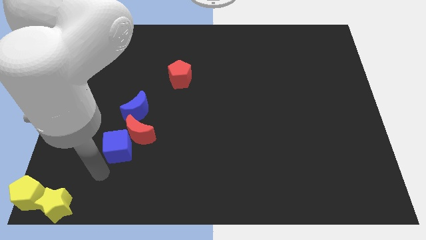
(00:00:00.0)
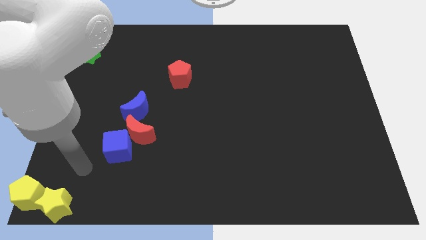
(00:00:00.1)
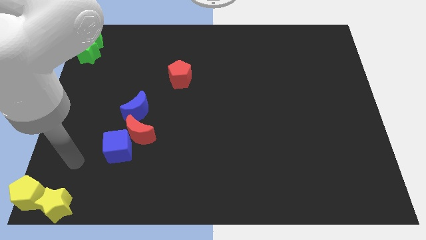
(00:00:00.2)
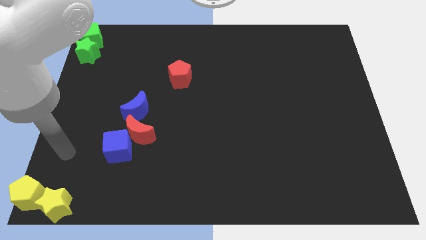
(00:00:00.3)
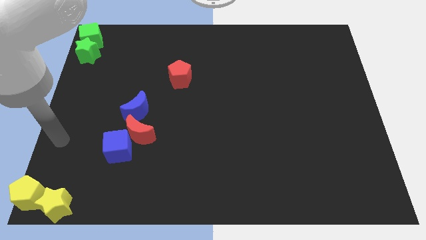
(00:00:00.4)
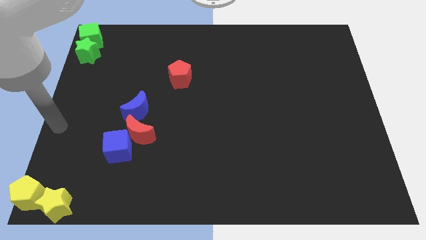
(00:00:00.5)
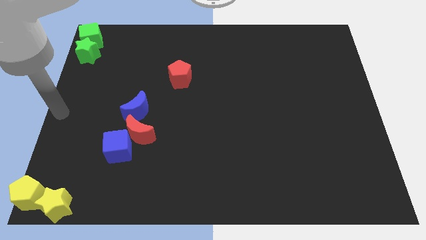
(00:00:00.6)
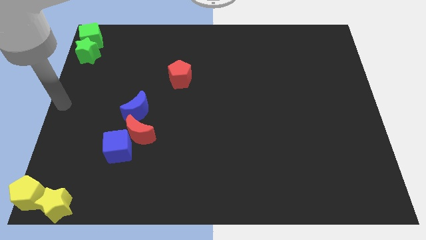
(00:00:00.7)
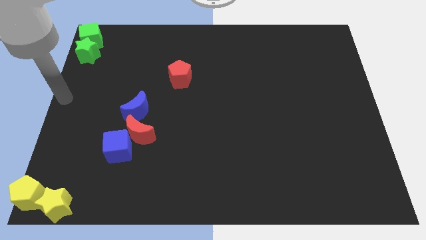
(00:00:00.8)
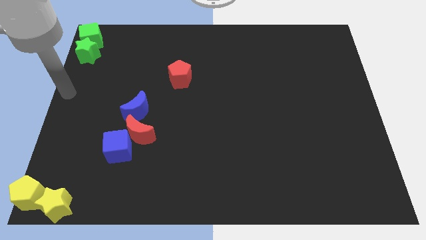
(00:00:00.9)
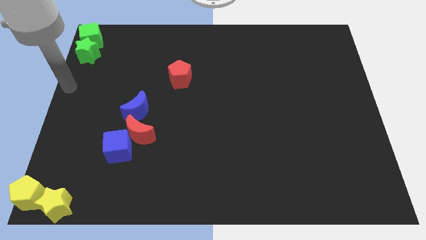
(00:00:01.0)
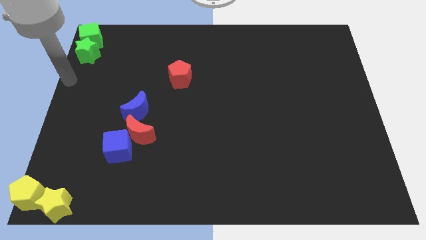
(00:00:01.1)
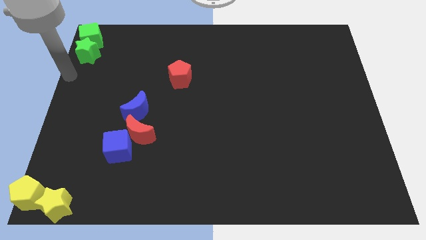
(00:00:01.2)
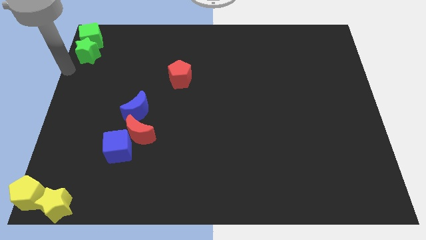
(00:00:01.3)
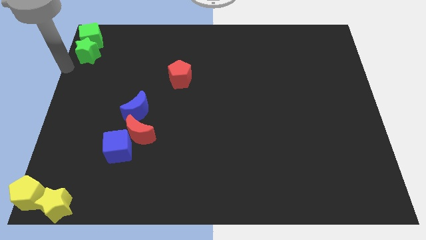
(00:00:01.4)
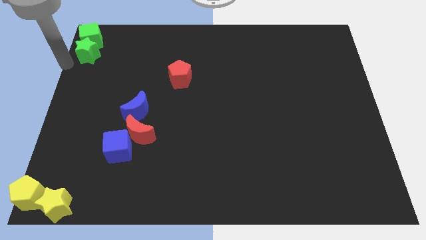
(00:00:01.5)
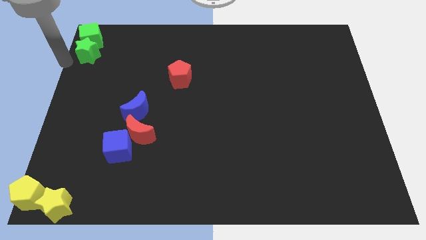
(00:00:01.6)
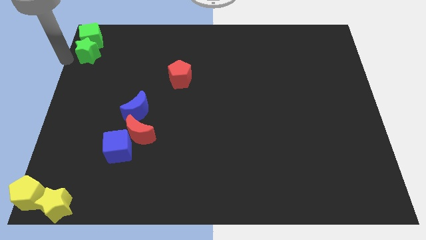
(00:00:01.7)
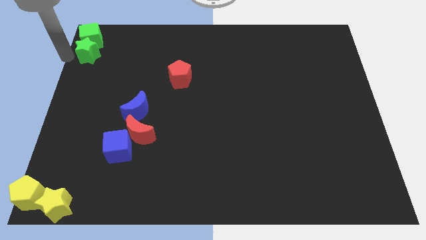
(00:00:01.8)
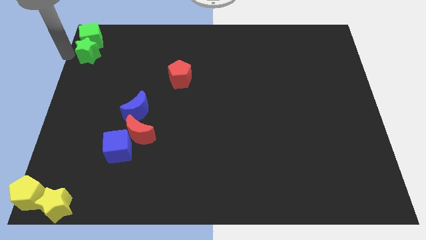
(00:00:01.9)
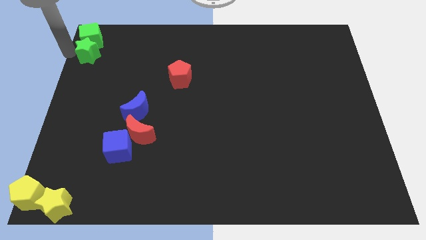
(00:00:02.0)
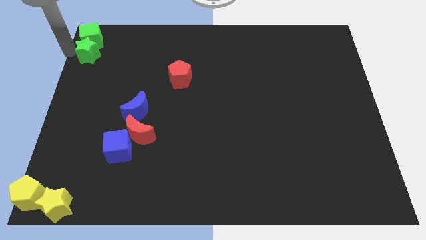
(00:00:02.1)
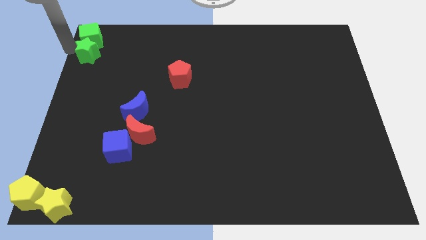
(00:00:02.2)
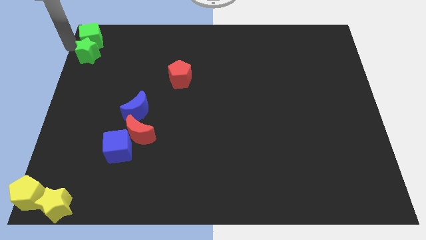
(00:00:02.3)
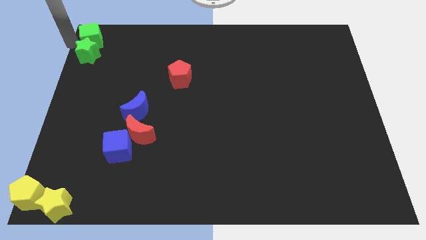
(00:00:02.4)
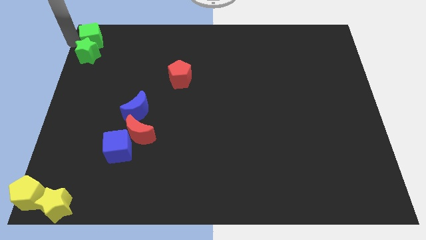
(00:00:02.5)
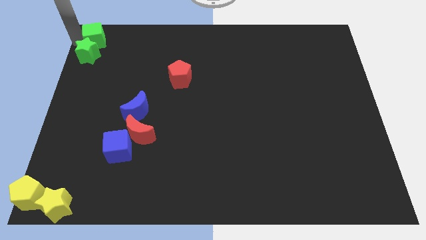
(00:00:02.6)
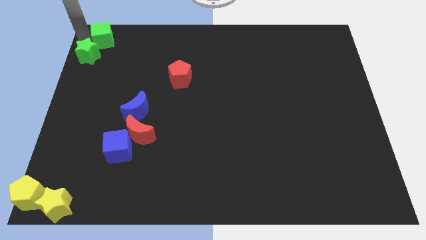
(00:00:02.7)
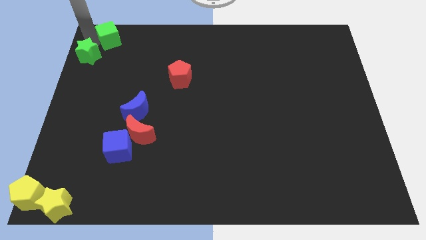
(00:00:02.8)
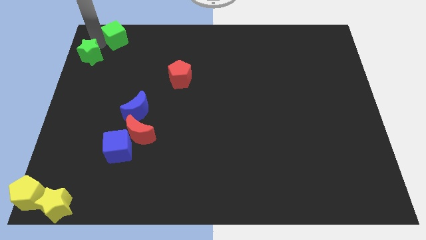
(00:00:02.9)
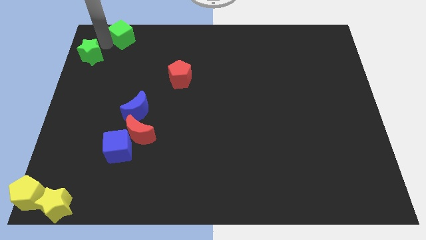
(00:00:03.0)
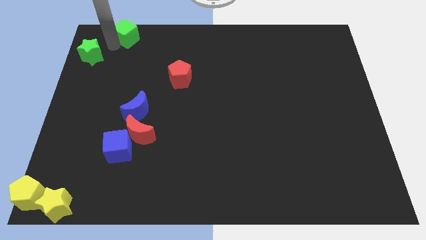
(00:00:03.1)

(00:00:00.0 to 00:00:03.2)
seprate the green objects

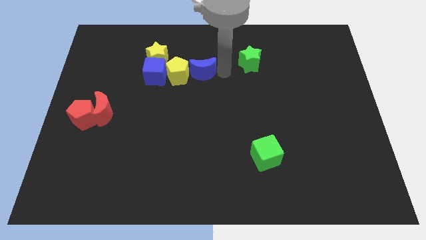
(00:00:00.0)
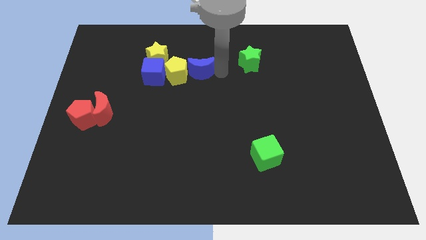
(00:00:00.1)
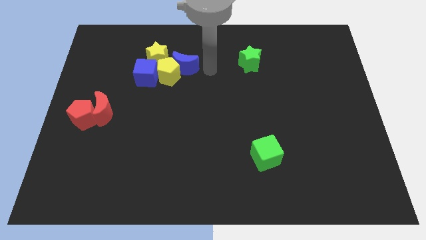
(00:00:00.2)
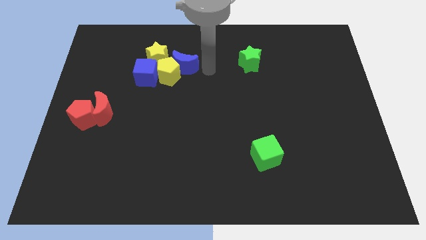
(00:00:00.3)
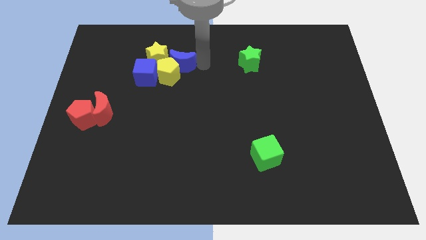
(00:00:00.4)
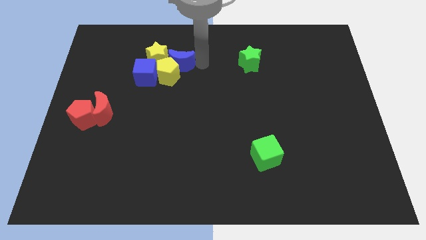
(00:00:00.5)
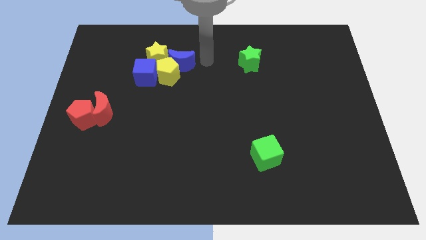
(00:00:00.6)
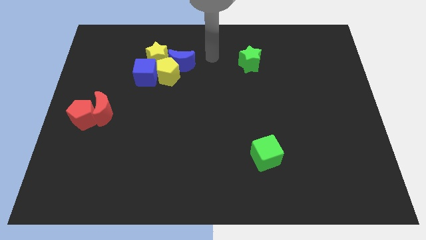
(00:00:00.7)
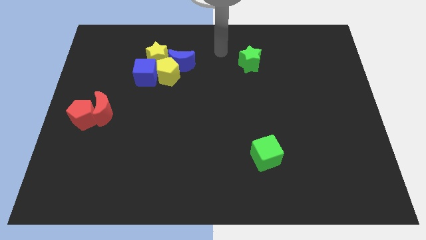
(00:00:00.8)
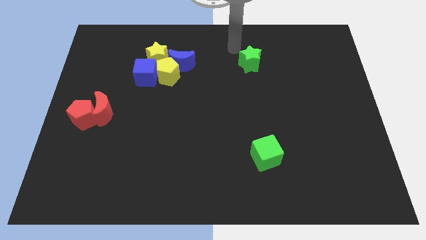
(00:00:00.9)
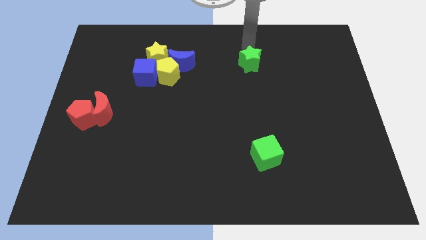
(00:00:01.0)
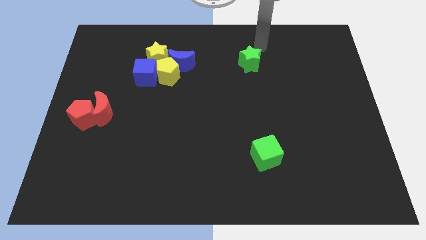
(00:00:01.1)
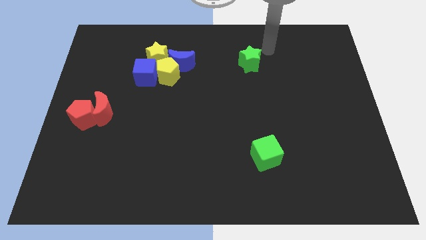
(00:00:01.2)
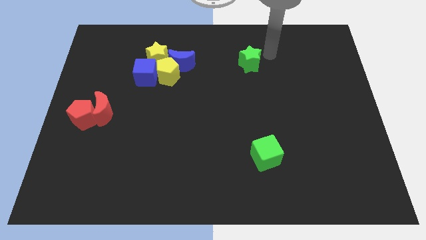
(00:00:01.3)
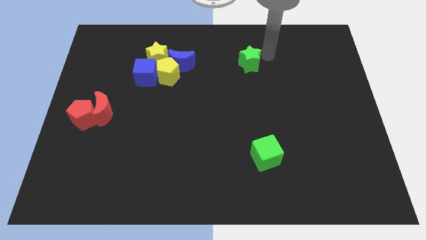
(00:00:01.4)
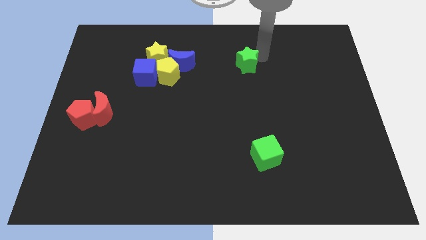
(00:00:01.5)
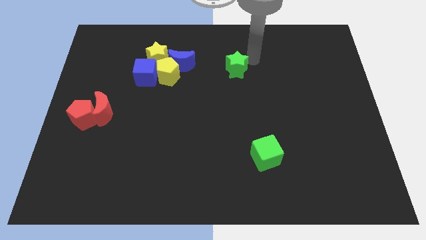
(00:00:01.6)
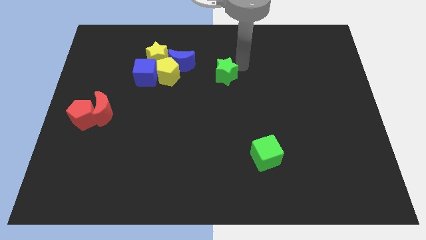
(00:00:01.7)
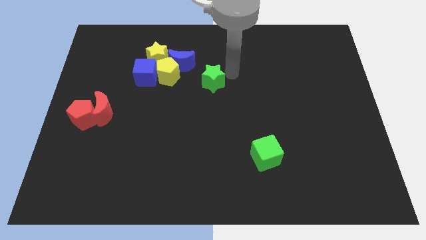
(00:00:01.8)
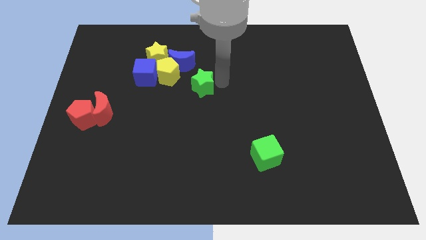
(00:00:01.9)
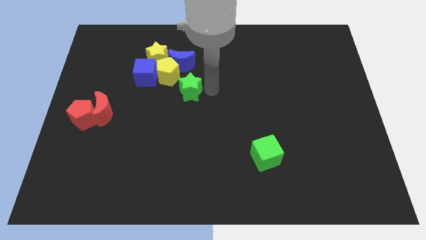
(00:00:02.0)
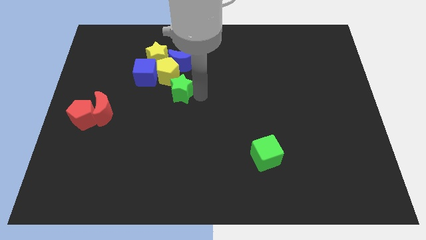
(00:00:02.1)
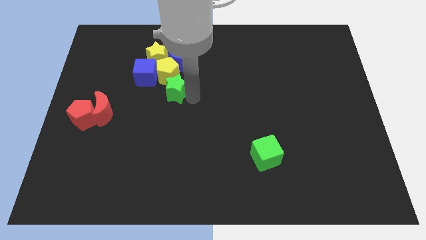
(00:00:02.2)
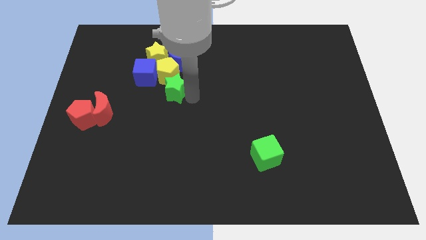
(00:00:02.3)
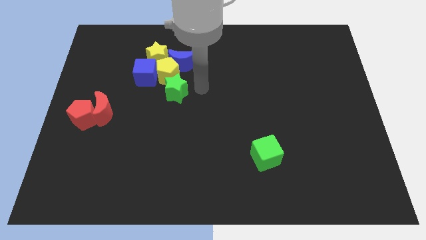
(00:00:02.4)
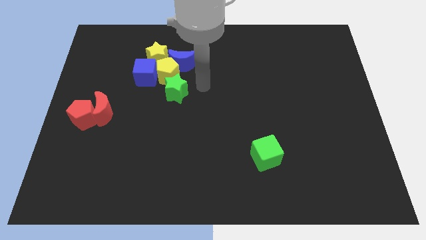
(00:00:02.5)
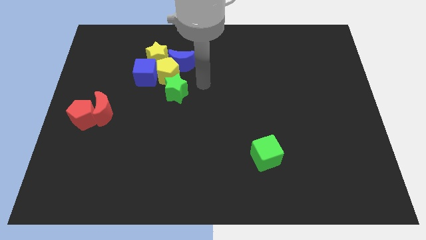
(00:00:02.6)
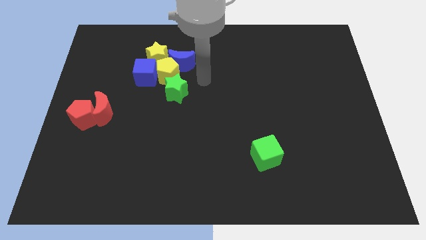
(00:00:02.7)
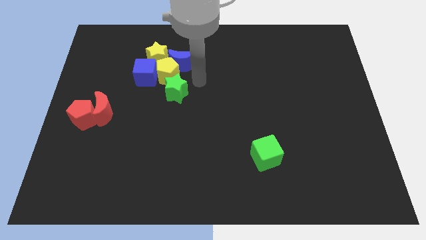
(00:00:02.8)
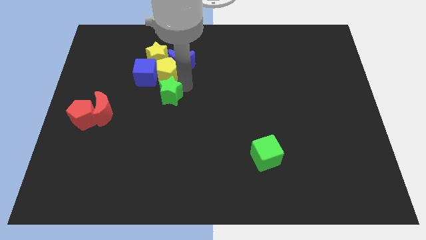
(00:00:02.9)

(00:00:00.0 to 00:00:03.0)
move the green star below the yellow pentagon

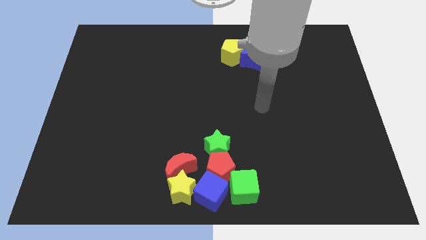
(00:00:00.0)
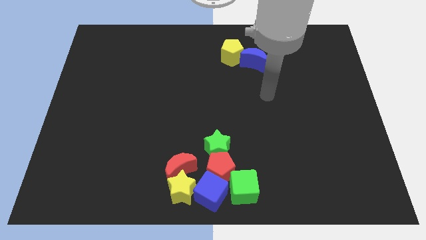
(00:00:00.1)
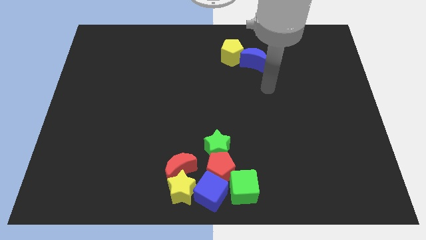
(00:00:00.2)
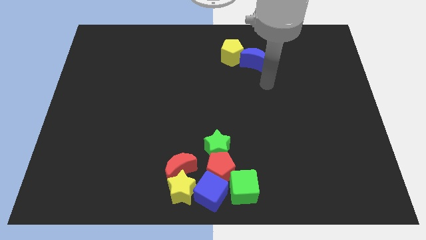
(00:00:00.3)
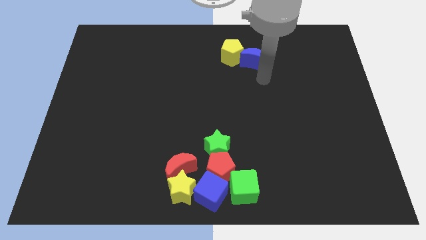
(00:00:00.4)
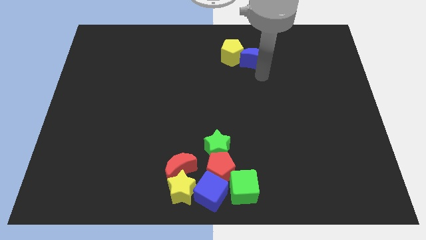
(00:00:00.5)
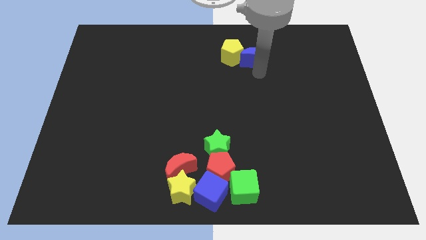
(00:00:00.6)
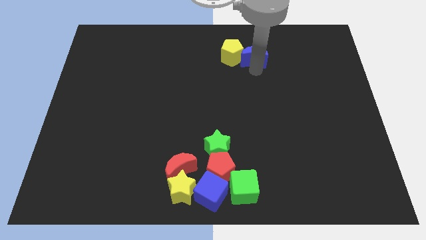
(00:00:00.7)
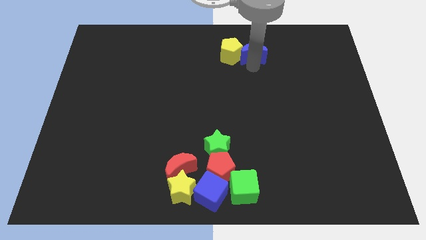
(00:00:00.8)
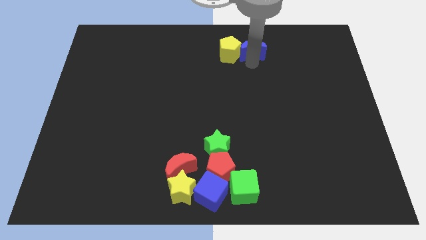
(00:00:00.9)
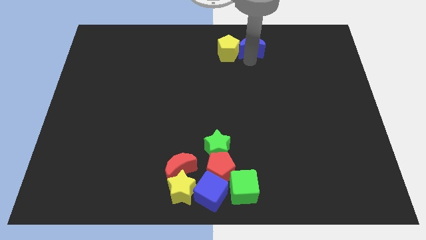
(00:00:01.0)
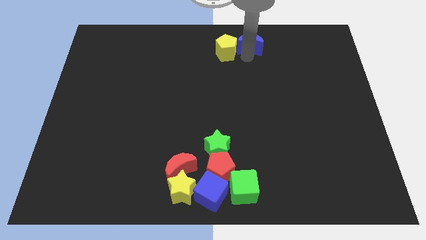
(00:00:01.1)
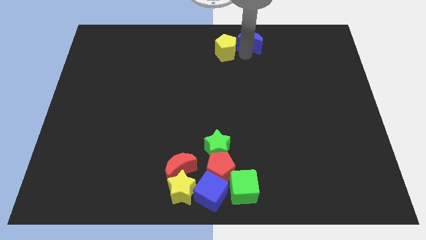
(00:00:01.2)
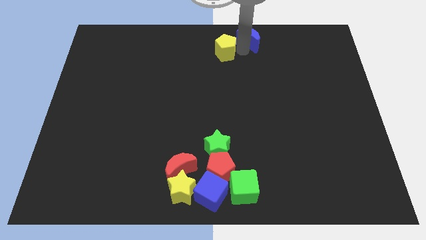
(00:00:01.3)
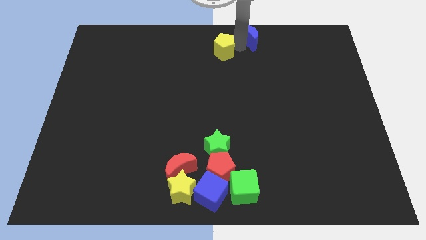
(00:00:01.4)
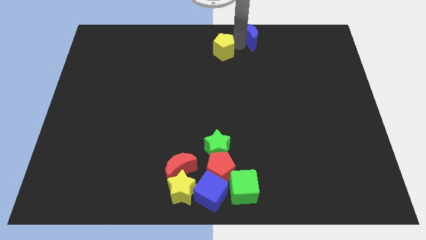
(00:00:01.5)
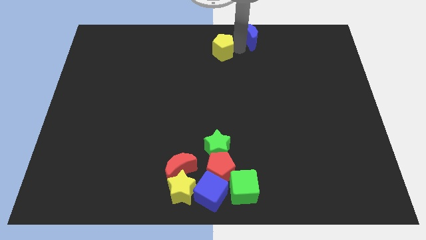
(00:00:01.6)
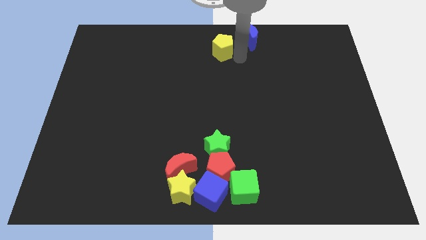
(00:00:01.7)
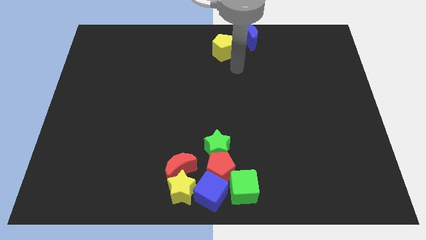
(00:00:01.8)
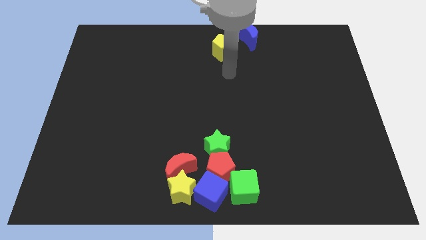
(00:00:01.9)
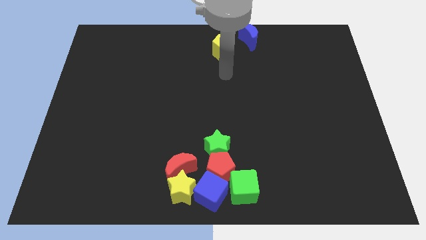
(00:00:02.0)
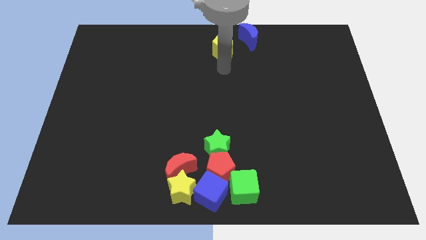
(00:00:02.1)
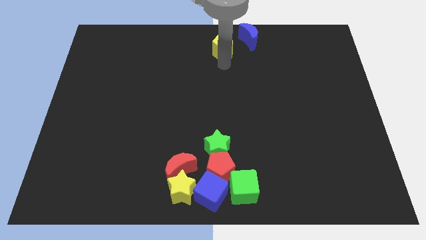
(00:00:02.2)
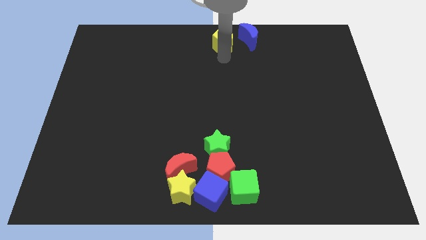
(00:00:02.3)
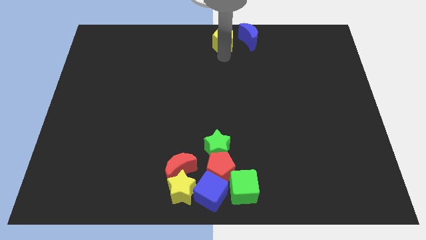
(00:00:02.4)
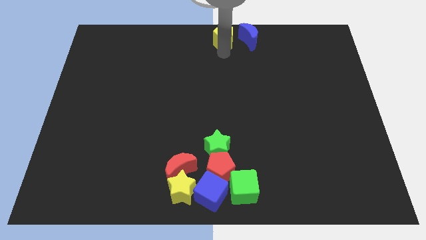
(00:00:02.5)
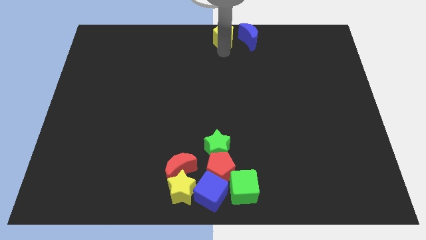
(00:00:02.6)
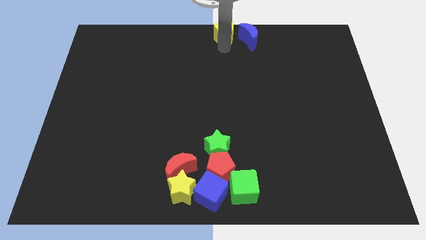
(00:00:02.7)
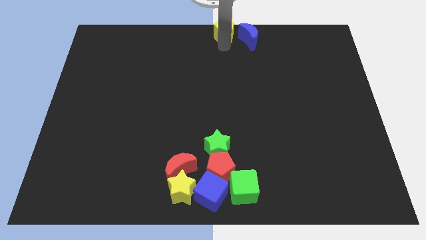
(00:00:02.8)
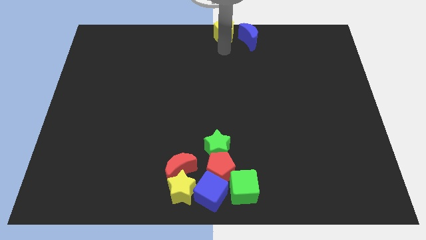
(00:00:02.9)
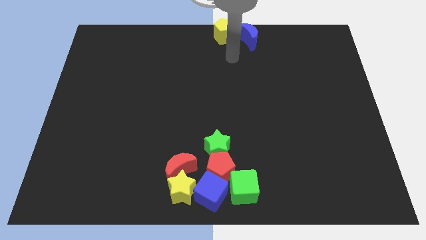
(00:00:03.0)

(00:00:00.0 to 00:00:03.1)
push the blue moon and yellow pentagon vertical to green star
